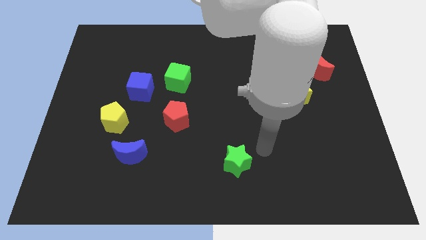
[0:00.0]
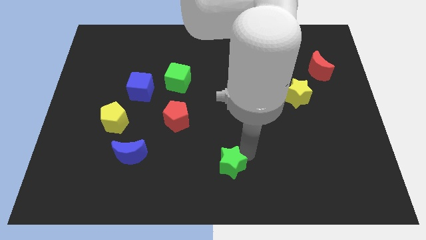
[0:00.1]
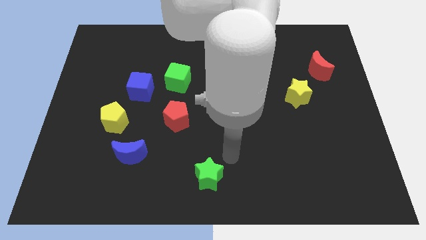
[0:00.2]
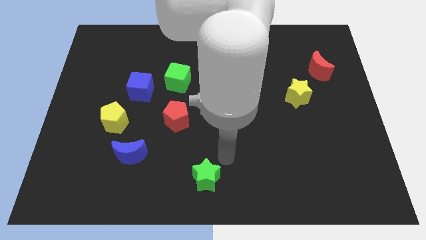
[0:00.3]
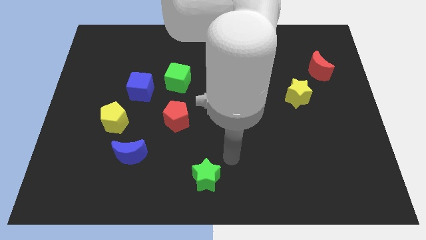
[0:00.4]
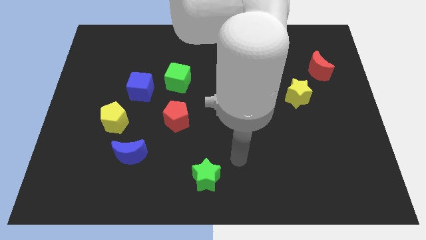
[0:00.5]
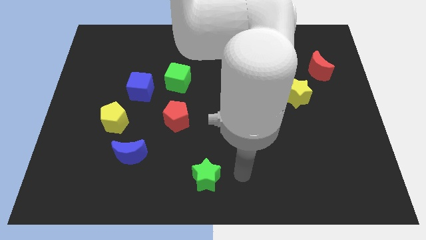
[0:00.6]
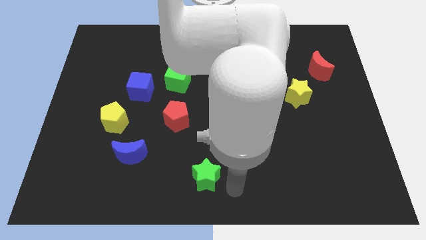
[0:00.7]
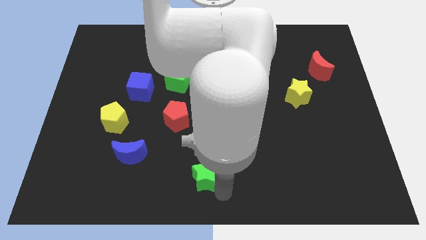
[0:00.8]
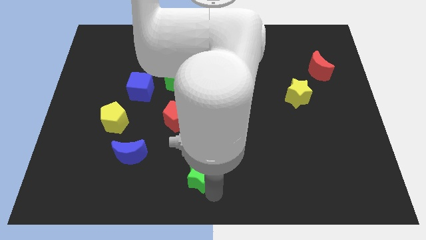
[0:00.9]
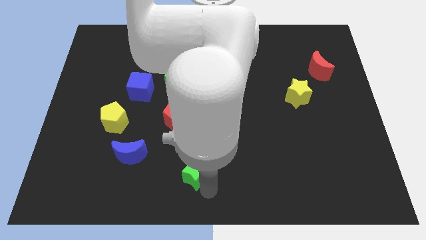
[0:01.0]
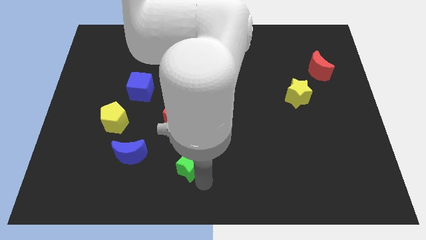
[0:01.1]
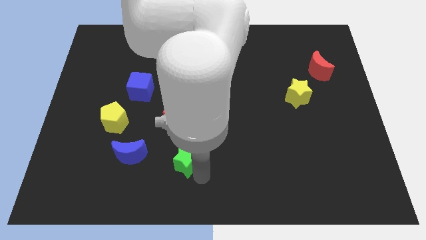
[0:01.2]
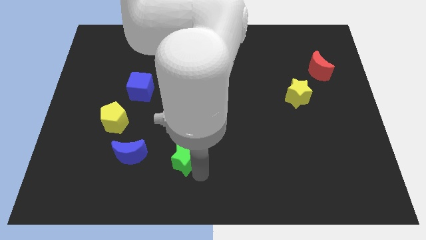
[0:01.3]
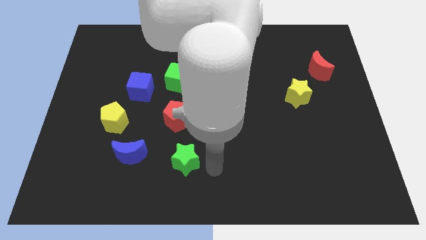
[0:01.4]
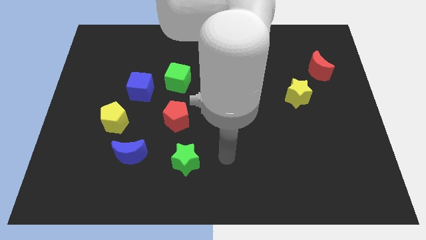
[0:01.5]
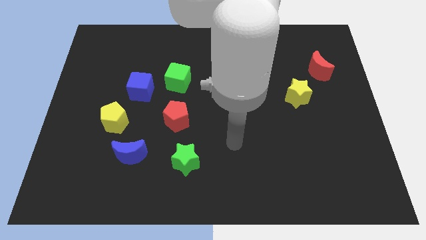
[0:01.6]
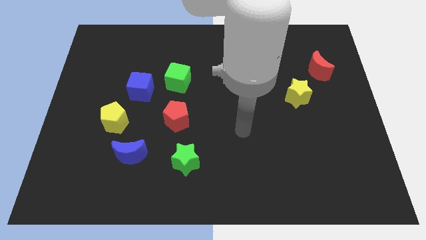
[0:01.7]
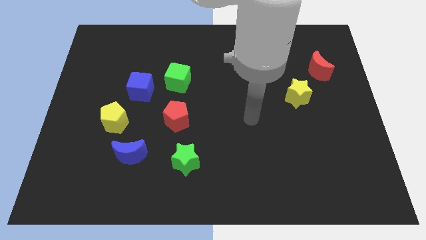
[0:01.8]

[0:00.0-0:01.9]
move the green star to the right of the blue crescent

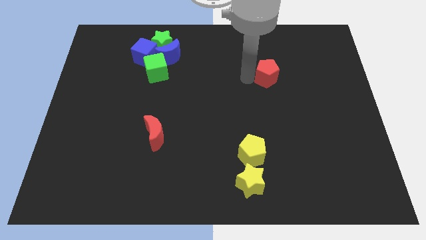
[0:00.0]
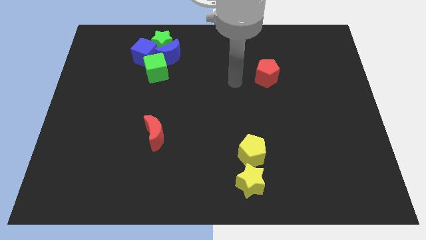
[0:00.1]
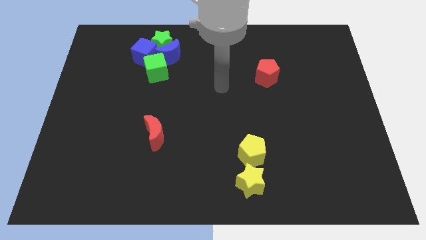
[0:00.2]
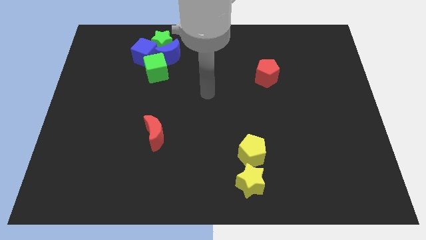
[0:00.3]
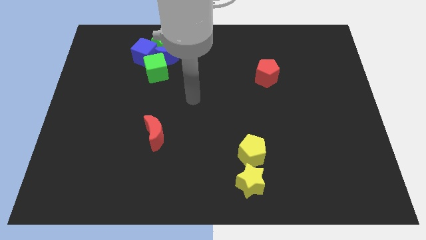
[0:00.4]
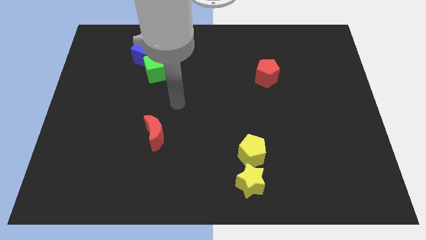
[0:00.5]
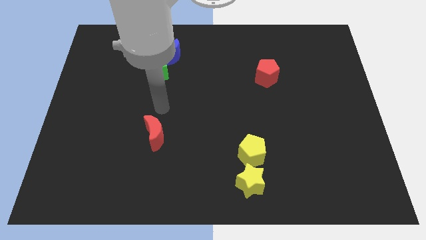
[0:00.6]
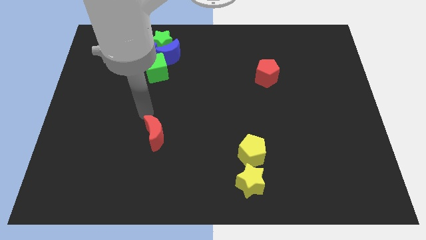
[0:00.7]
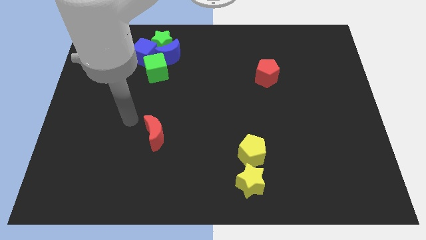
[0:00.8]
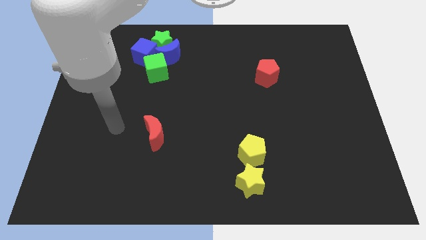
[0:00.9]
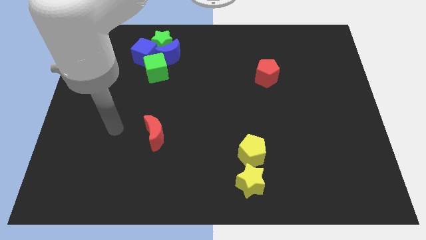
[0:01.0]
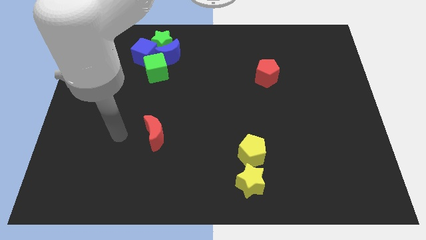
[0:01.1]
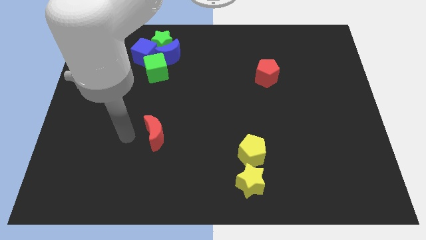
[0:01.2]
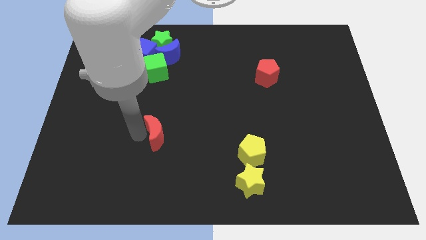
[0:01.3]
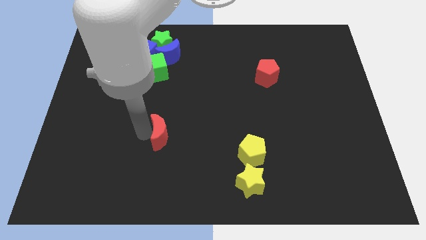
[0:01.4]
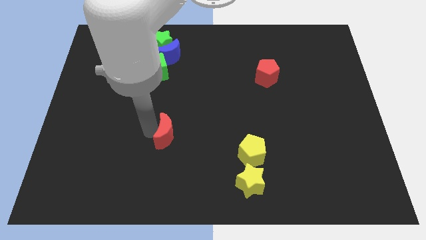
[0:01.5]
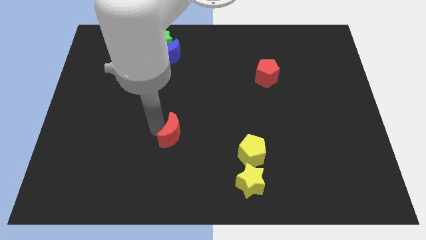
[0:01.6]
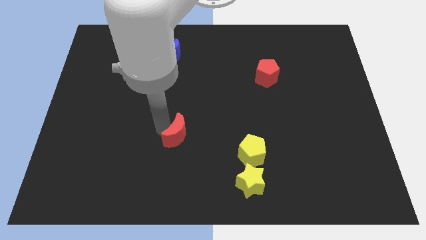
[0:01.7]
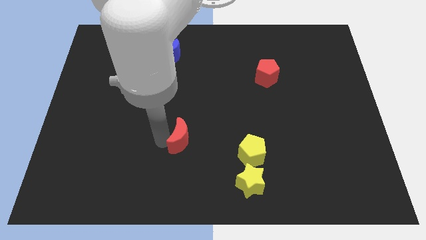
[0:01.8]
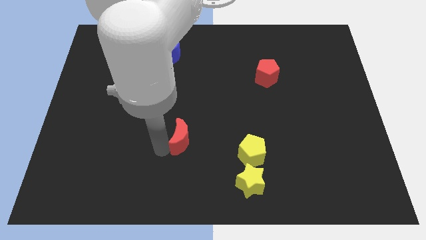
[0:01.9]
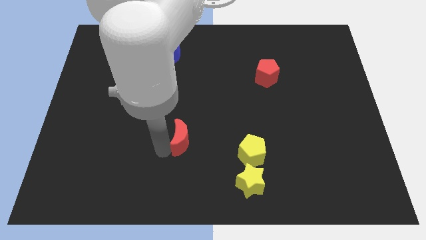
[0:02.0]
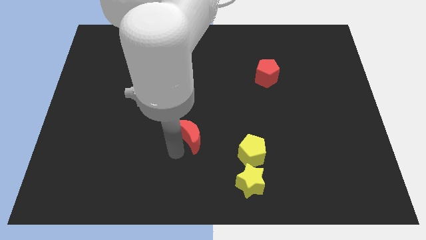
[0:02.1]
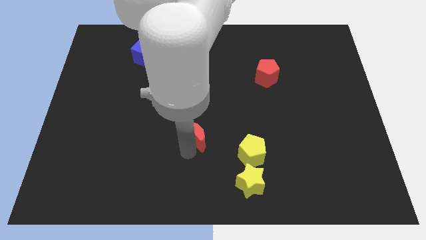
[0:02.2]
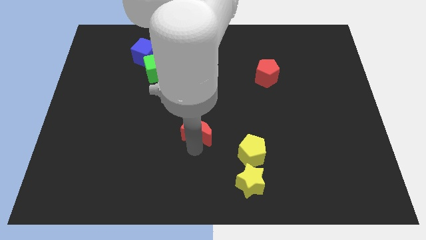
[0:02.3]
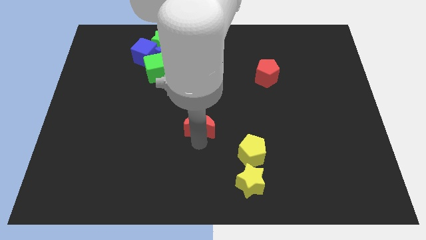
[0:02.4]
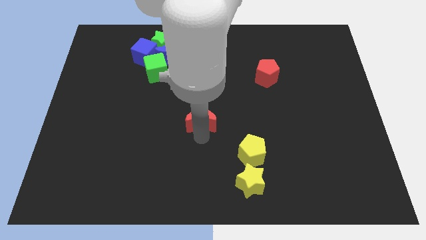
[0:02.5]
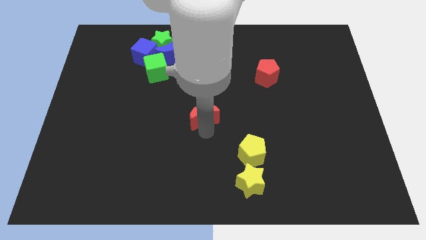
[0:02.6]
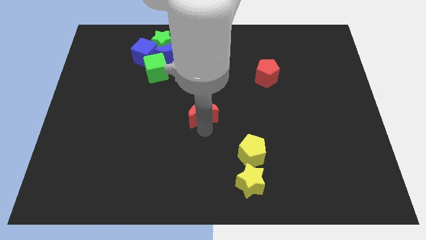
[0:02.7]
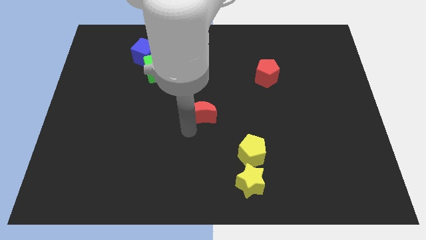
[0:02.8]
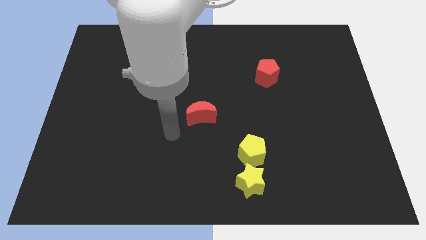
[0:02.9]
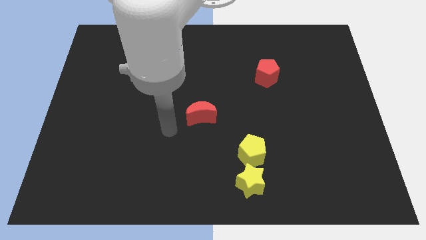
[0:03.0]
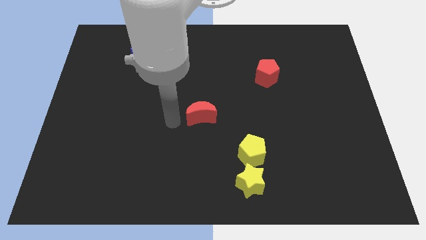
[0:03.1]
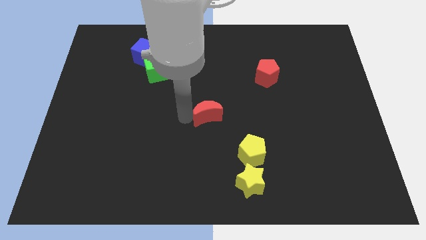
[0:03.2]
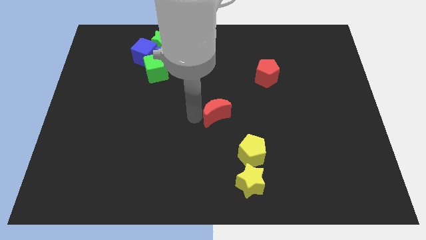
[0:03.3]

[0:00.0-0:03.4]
move the red crescent to the center of the board

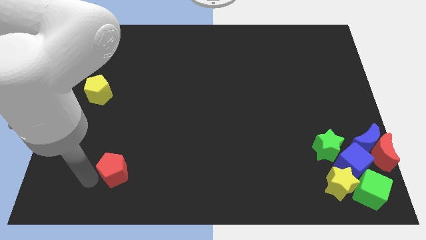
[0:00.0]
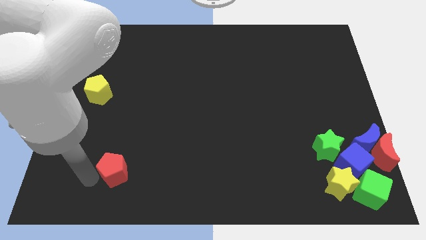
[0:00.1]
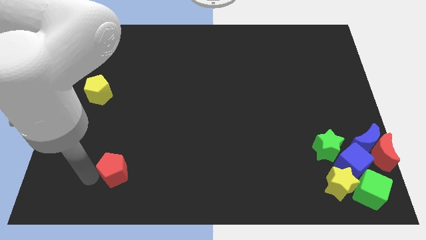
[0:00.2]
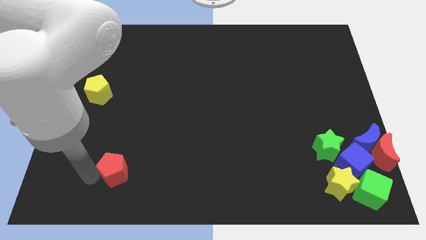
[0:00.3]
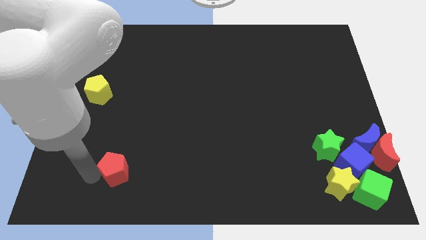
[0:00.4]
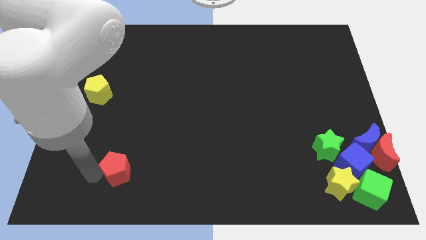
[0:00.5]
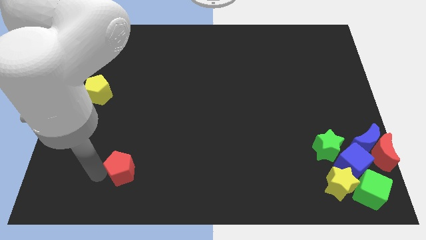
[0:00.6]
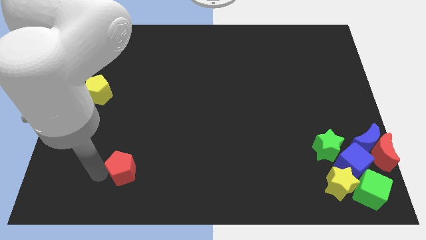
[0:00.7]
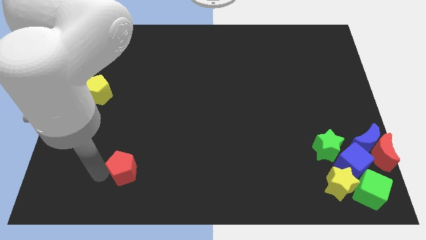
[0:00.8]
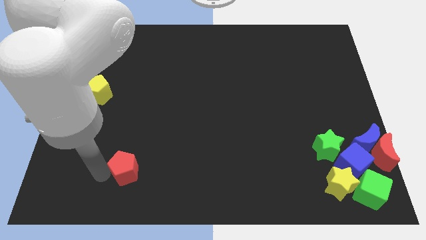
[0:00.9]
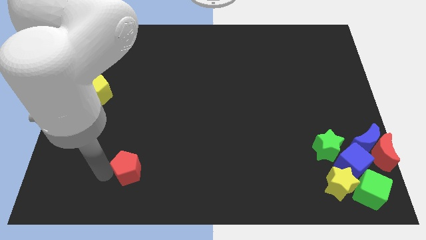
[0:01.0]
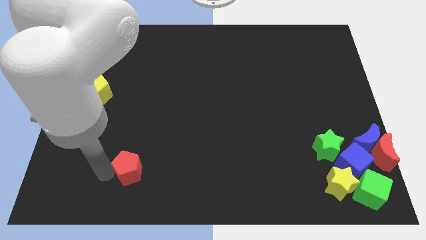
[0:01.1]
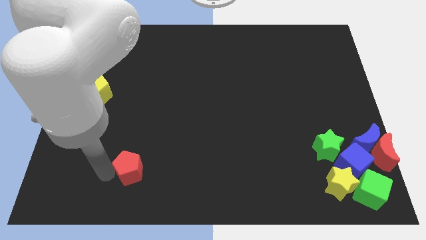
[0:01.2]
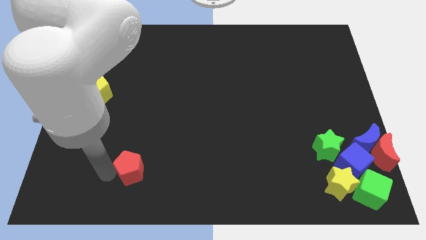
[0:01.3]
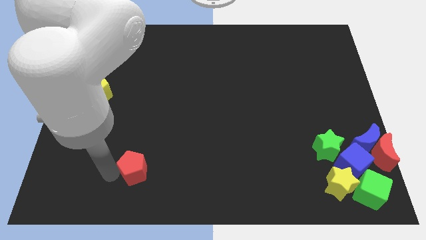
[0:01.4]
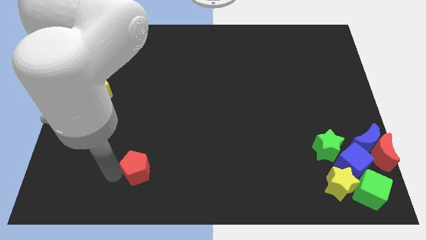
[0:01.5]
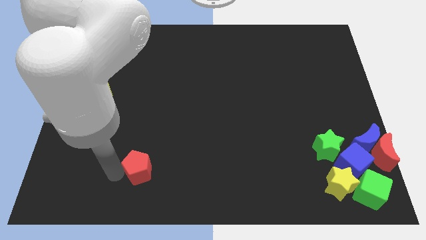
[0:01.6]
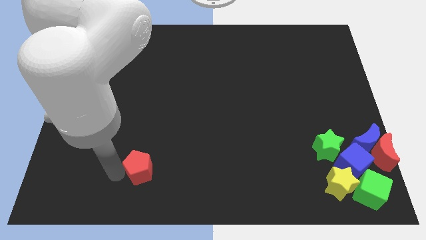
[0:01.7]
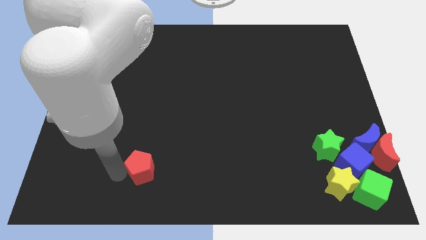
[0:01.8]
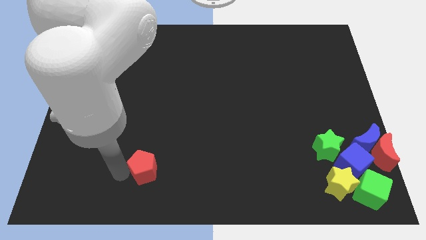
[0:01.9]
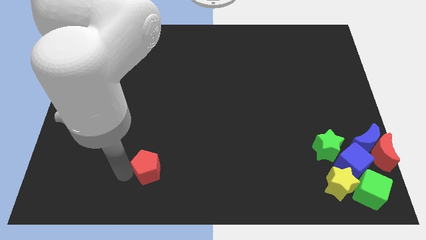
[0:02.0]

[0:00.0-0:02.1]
slide the red pentagon to the right

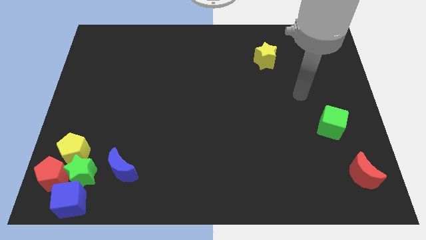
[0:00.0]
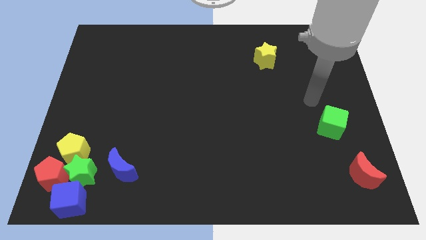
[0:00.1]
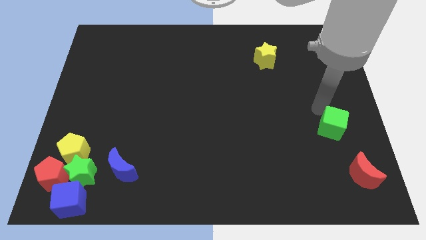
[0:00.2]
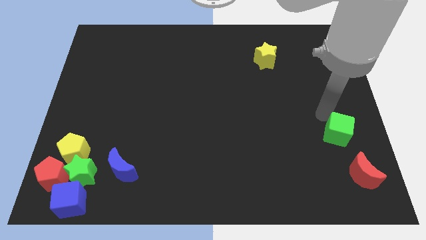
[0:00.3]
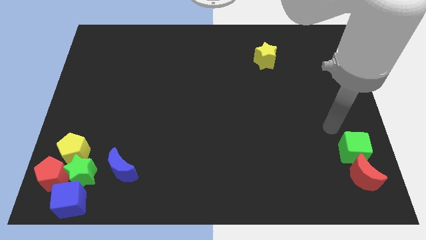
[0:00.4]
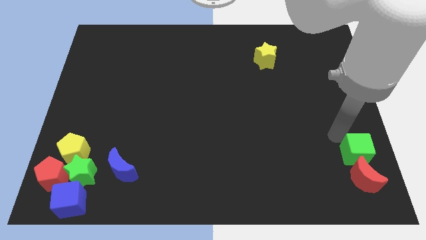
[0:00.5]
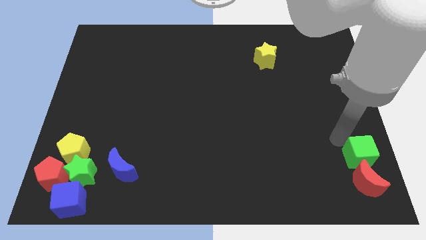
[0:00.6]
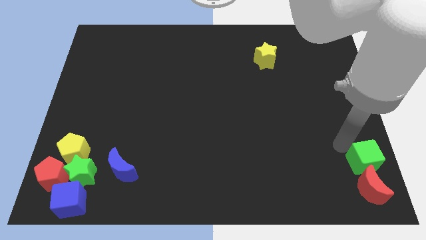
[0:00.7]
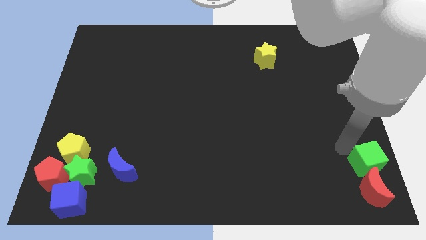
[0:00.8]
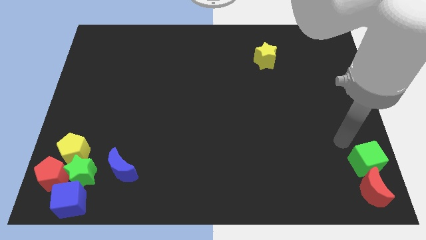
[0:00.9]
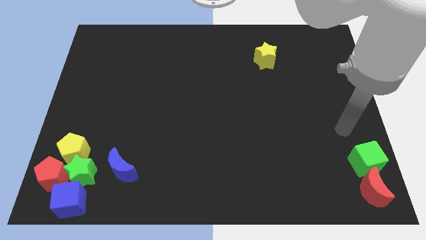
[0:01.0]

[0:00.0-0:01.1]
push green cube into red moon

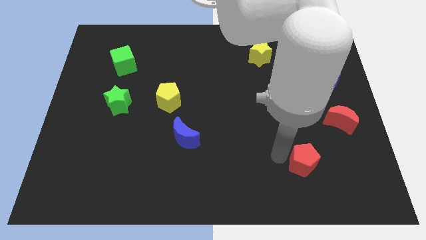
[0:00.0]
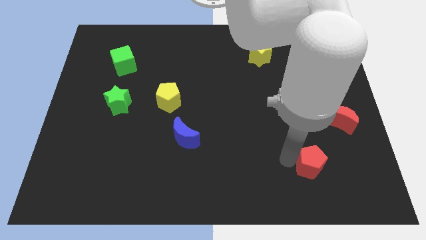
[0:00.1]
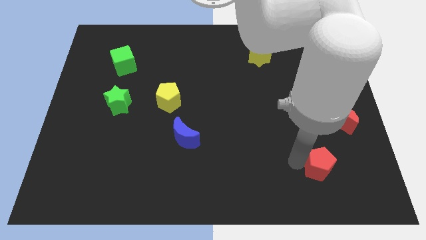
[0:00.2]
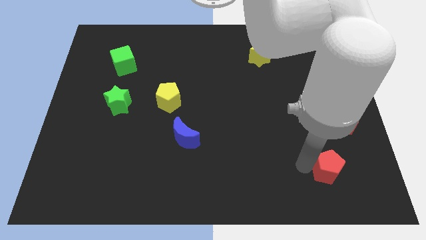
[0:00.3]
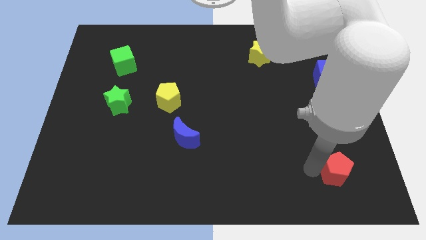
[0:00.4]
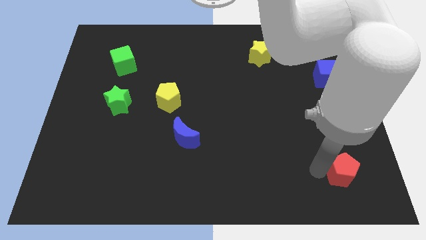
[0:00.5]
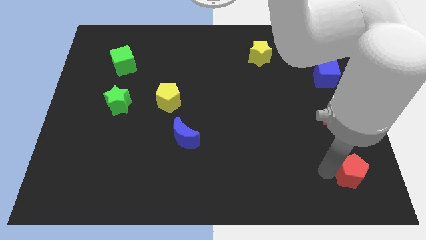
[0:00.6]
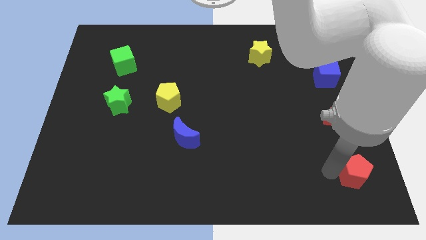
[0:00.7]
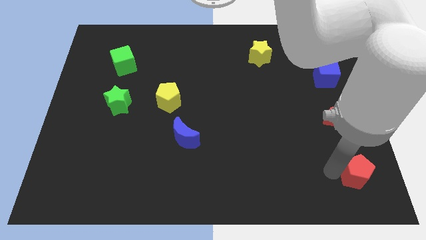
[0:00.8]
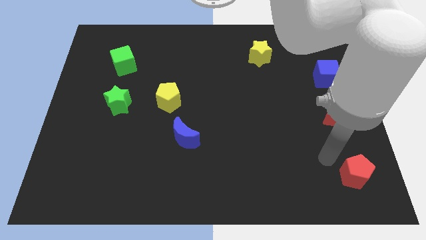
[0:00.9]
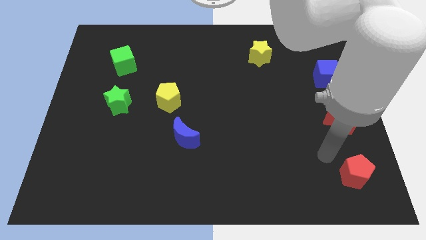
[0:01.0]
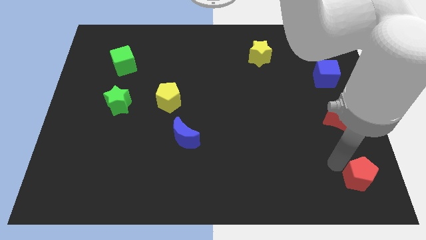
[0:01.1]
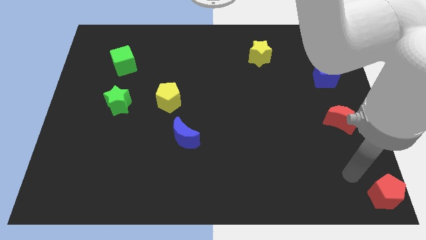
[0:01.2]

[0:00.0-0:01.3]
move the red pentagon to the bottom right corner of the board
